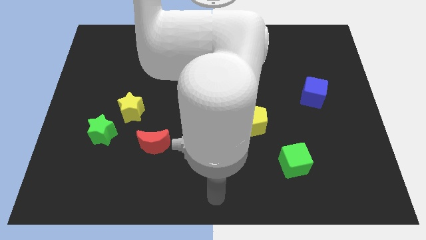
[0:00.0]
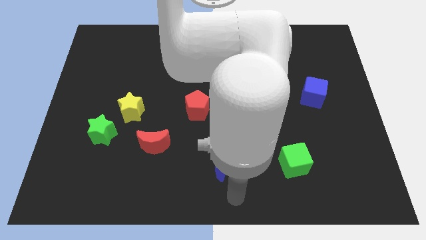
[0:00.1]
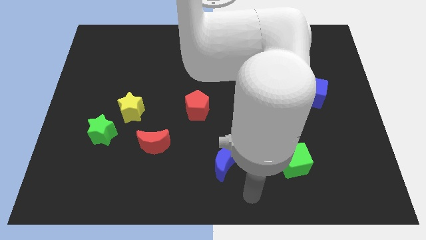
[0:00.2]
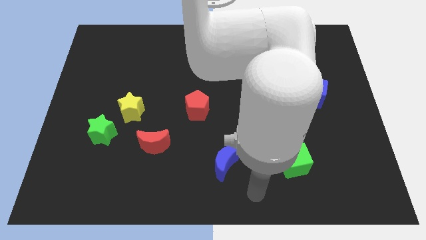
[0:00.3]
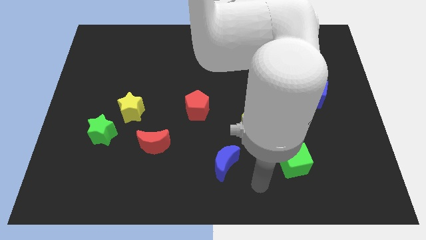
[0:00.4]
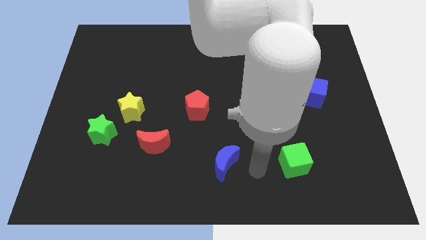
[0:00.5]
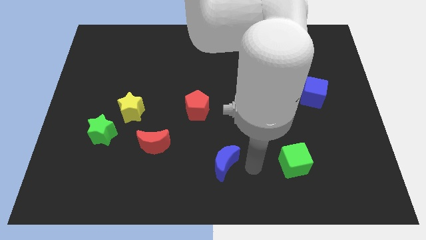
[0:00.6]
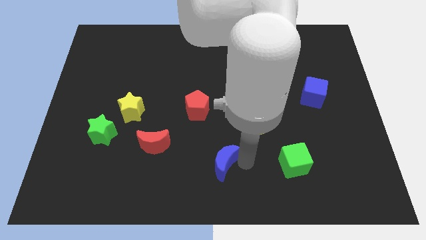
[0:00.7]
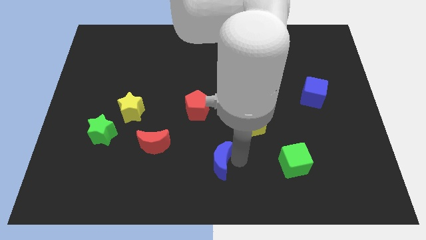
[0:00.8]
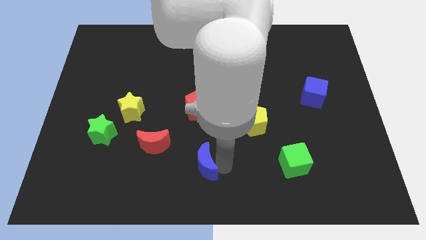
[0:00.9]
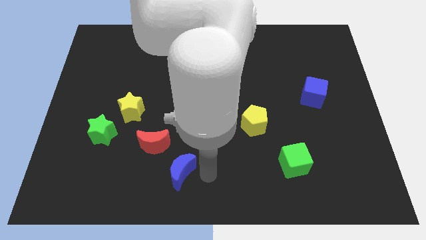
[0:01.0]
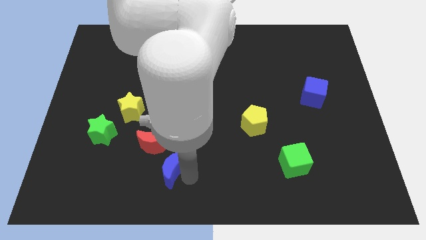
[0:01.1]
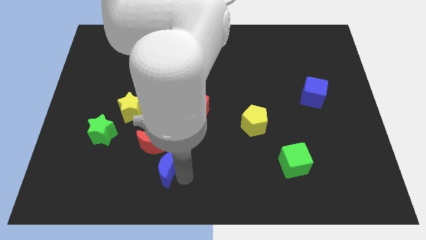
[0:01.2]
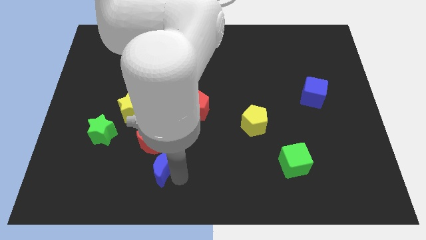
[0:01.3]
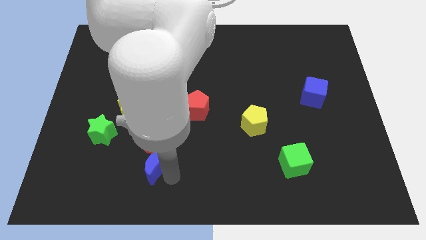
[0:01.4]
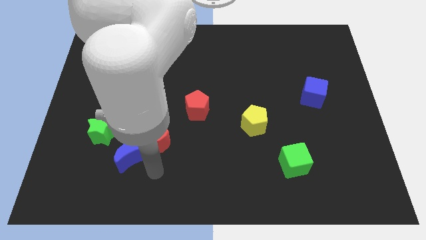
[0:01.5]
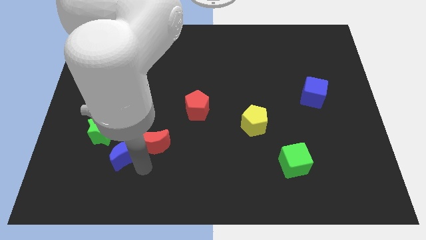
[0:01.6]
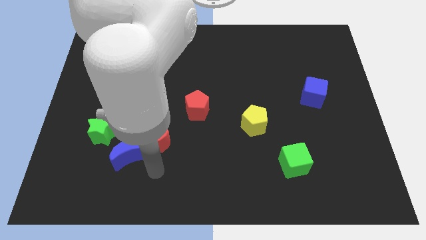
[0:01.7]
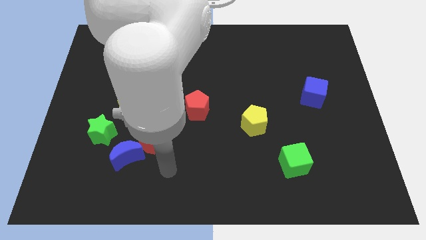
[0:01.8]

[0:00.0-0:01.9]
push the blue moon towards the green star

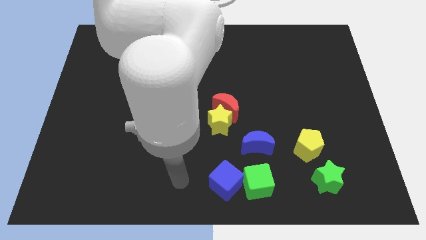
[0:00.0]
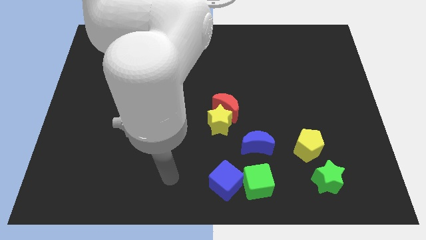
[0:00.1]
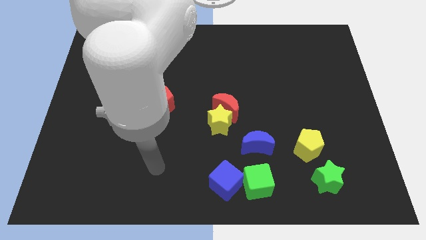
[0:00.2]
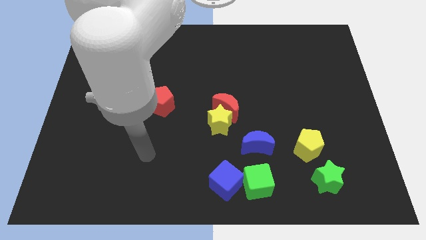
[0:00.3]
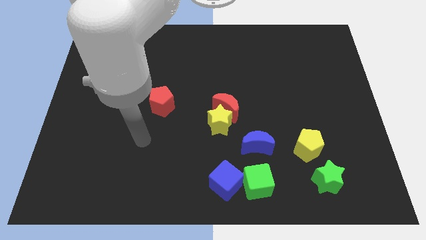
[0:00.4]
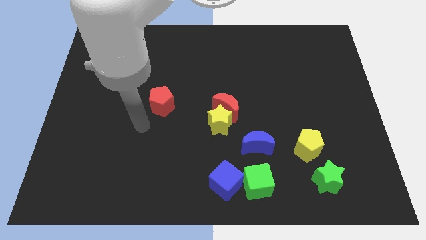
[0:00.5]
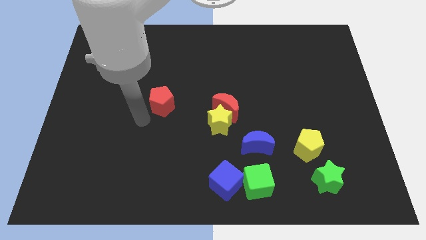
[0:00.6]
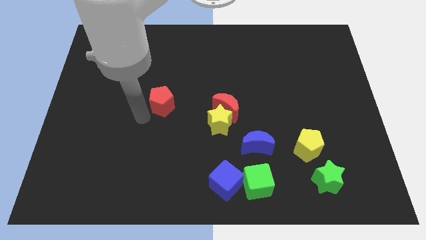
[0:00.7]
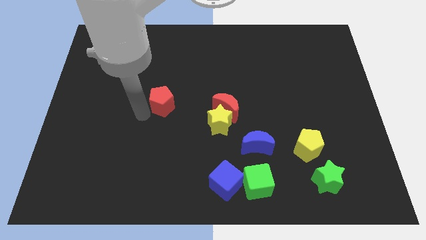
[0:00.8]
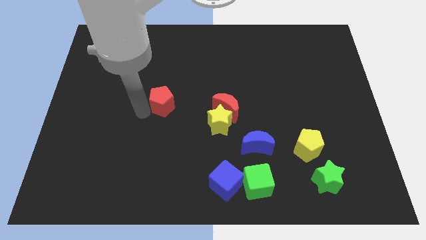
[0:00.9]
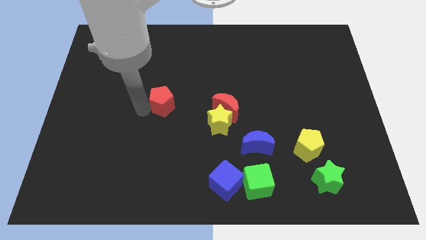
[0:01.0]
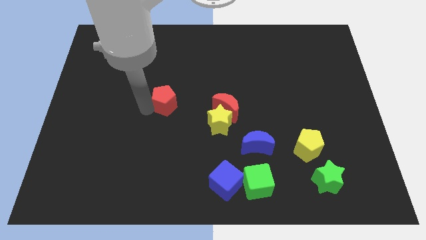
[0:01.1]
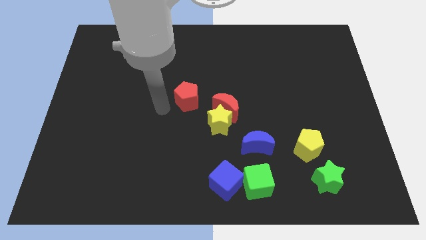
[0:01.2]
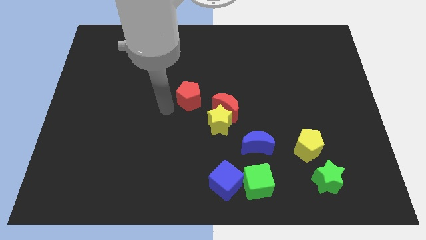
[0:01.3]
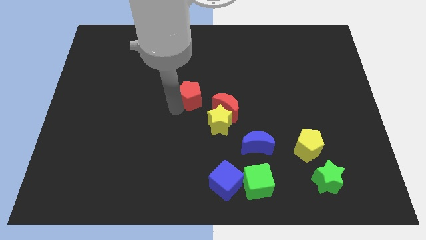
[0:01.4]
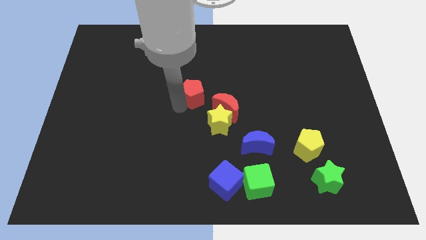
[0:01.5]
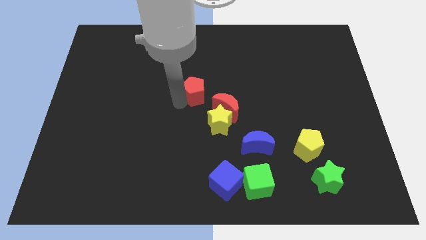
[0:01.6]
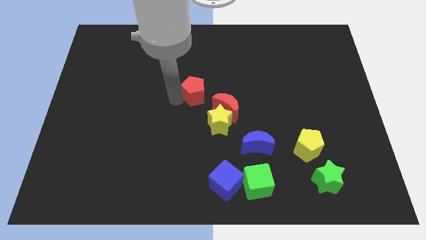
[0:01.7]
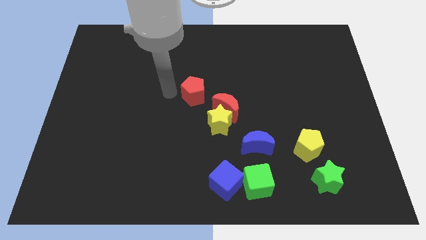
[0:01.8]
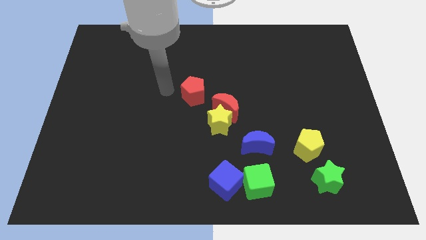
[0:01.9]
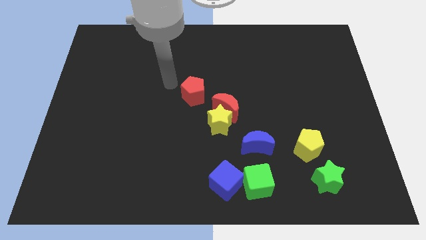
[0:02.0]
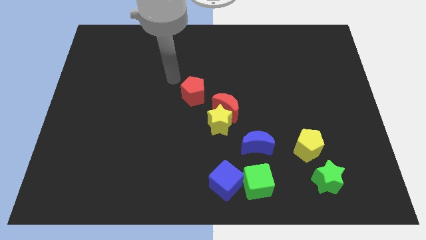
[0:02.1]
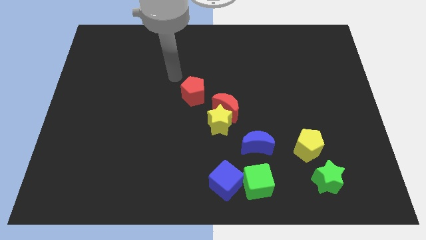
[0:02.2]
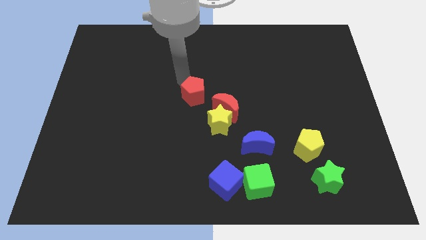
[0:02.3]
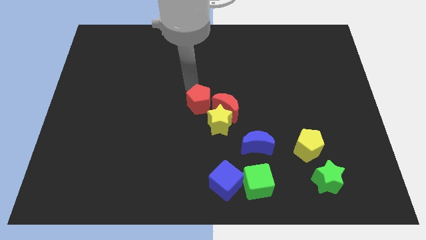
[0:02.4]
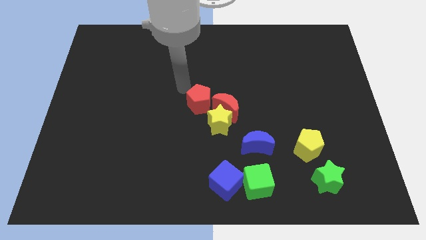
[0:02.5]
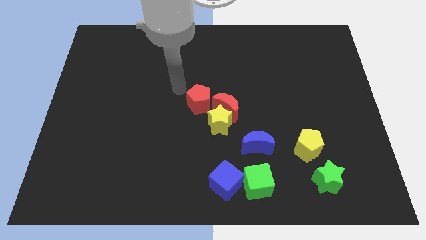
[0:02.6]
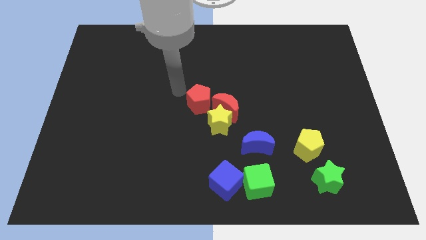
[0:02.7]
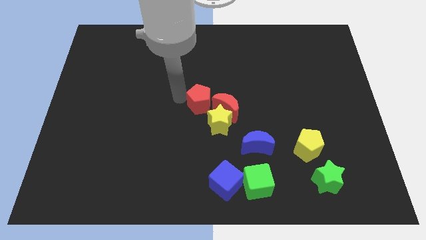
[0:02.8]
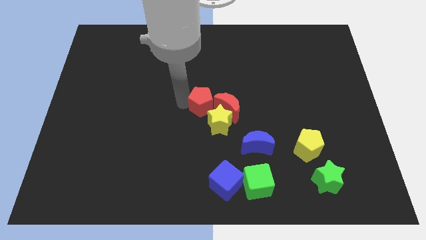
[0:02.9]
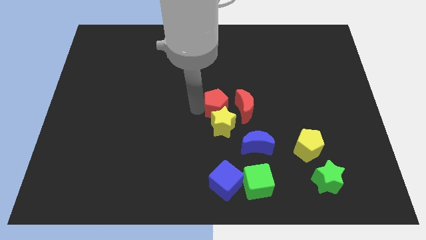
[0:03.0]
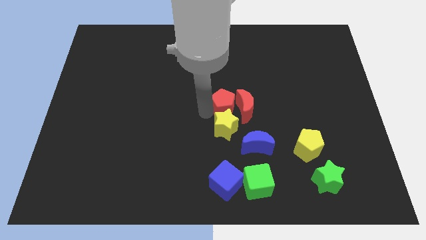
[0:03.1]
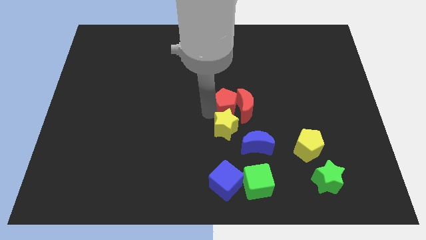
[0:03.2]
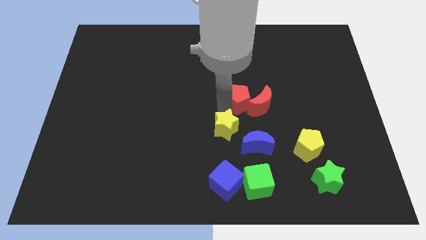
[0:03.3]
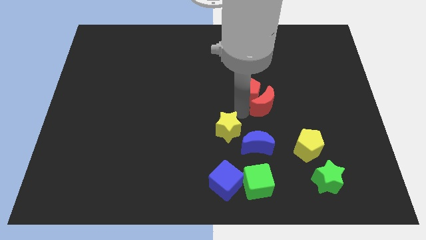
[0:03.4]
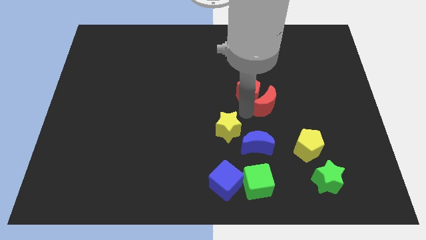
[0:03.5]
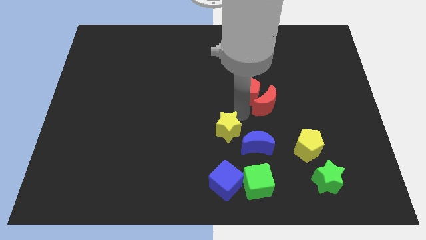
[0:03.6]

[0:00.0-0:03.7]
push the red pentagon into the red crescent

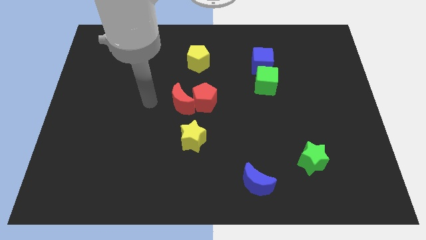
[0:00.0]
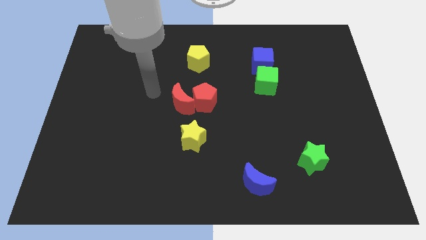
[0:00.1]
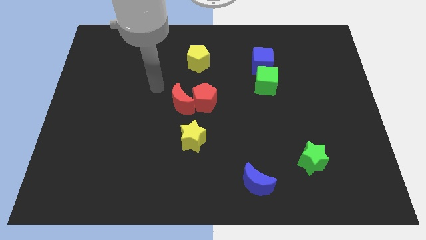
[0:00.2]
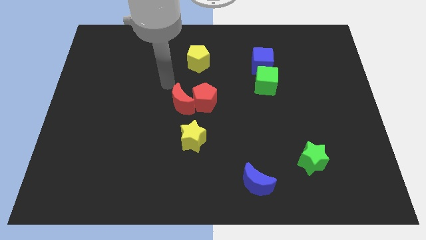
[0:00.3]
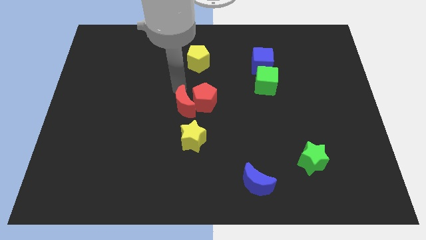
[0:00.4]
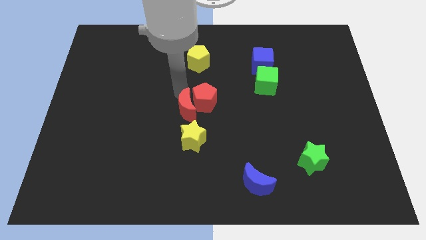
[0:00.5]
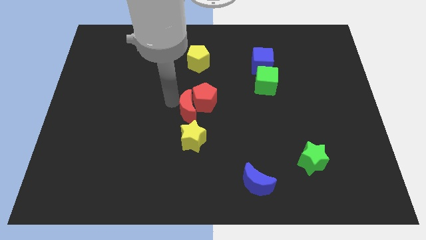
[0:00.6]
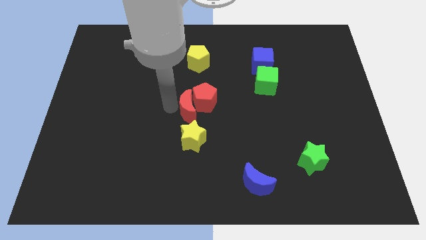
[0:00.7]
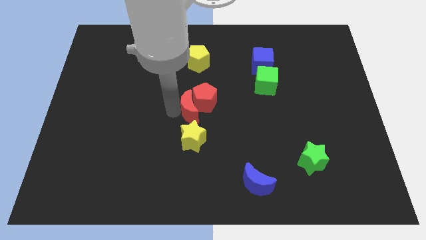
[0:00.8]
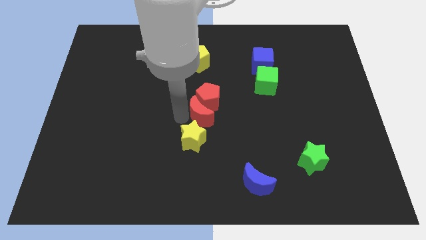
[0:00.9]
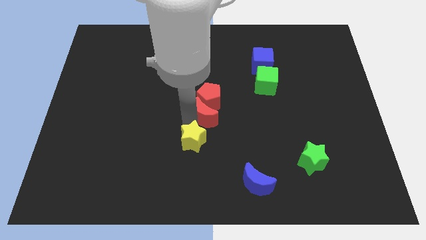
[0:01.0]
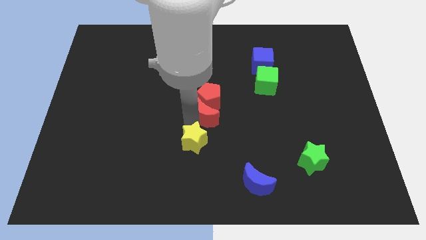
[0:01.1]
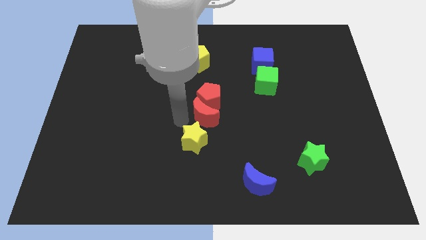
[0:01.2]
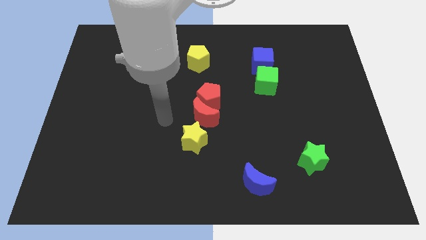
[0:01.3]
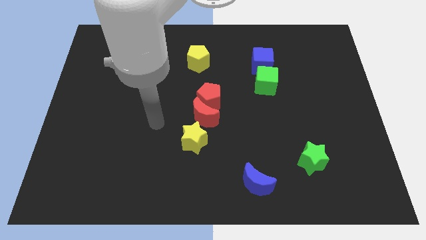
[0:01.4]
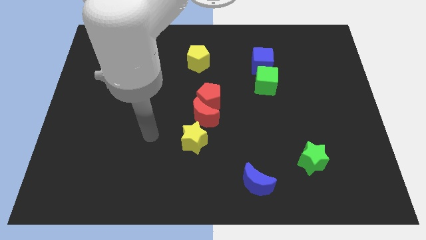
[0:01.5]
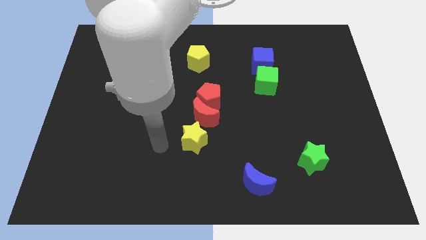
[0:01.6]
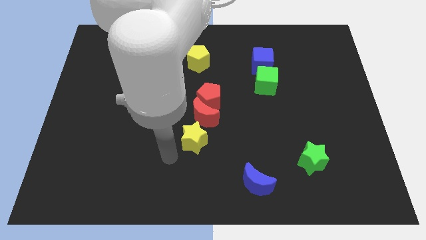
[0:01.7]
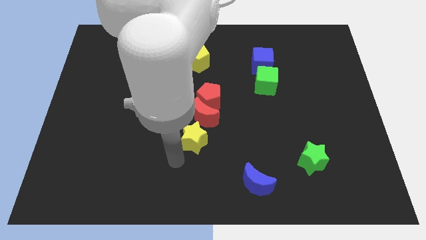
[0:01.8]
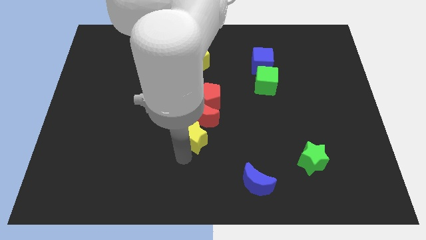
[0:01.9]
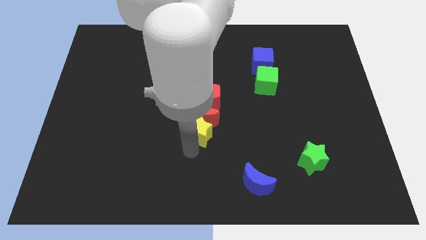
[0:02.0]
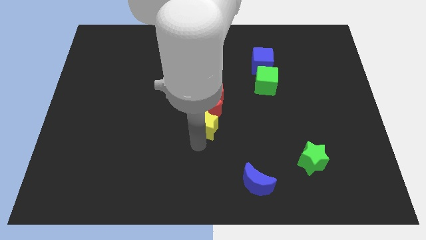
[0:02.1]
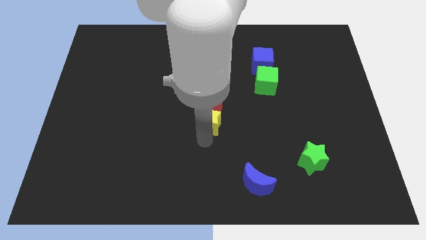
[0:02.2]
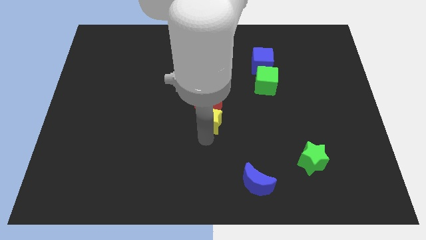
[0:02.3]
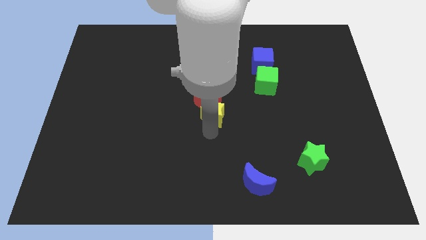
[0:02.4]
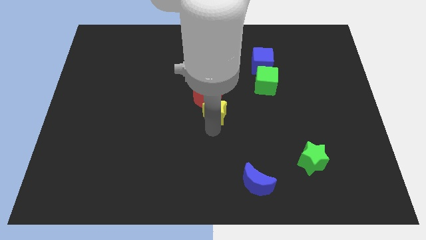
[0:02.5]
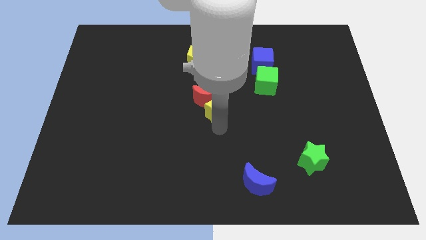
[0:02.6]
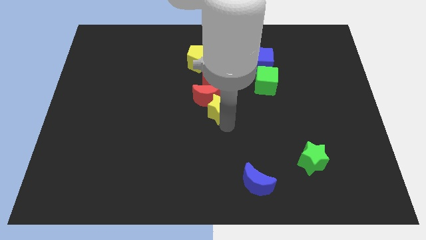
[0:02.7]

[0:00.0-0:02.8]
push the yellow star into red blocks

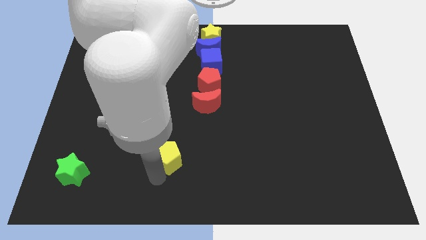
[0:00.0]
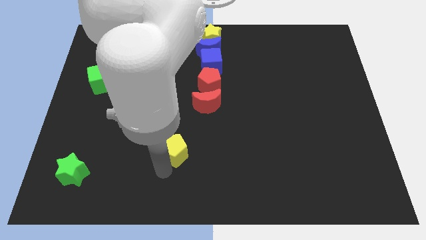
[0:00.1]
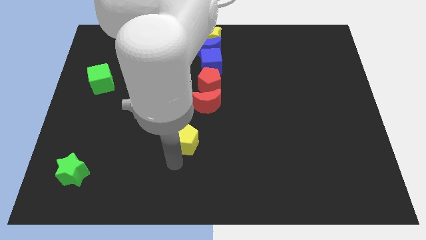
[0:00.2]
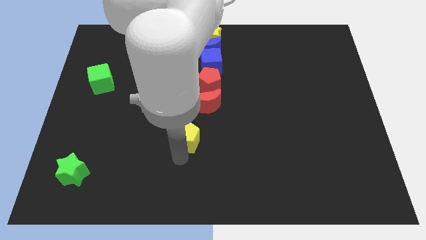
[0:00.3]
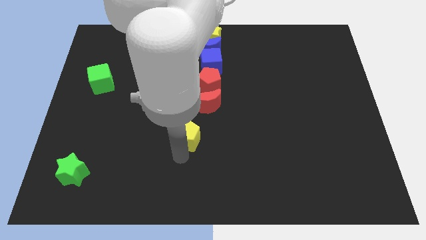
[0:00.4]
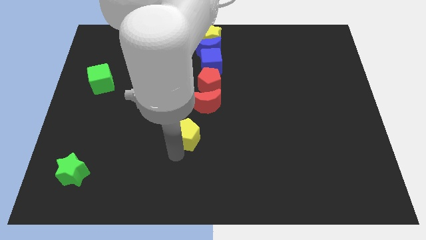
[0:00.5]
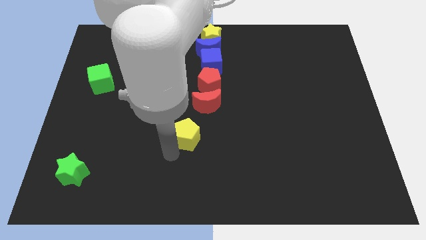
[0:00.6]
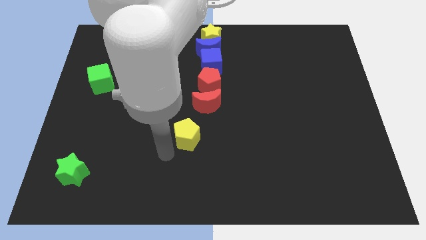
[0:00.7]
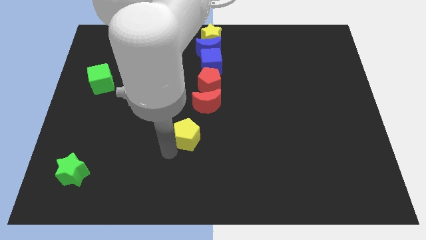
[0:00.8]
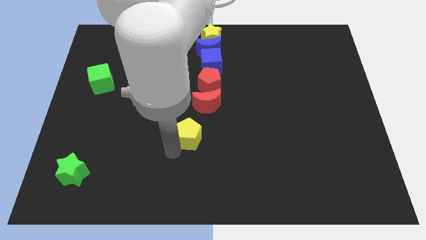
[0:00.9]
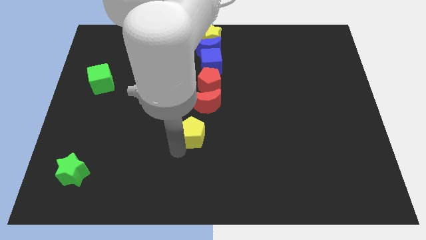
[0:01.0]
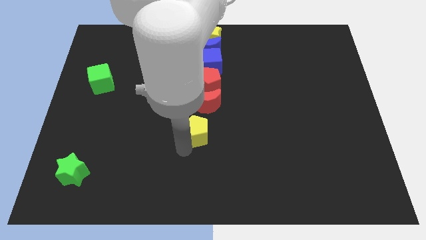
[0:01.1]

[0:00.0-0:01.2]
push the yellow pentagon towards the bottom side of the red crescent
